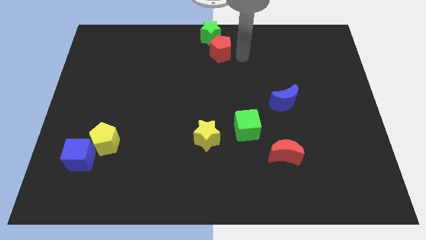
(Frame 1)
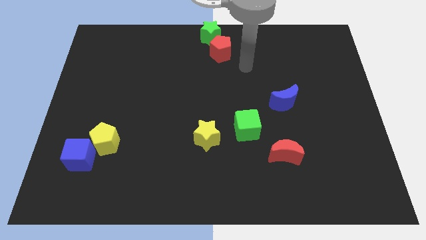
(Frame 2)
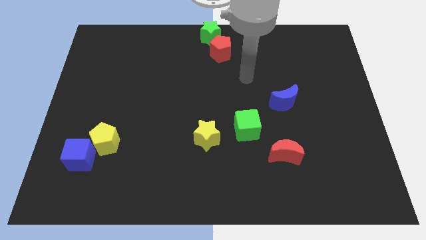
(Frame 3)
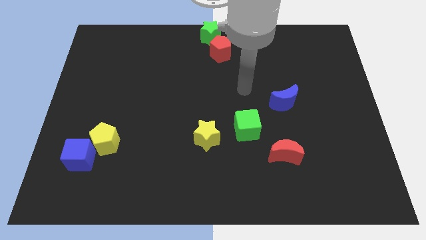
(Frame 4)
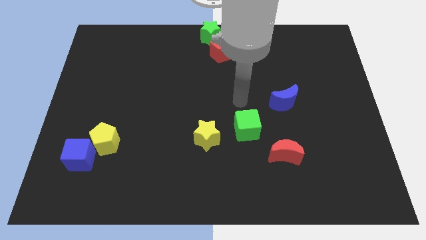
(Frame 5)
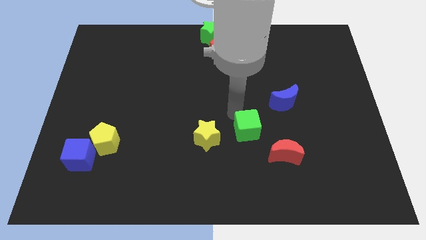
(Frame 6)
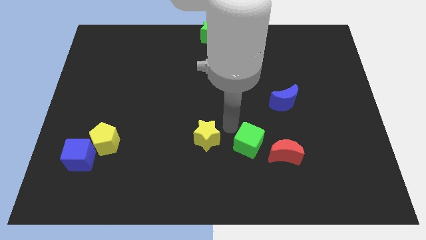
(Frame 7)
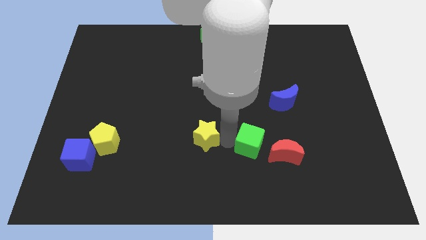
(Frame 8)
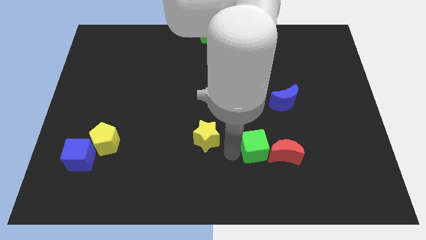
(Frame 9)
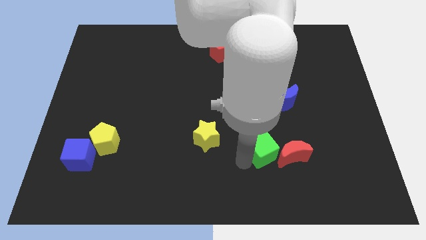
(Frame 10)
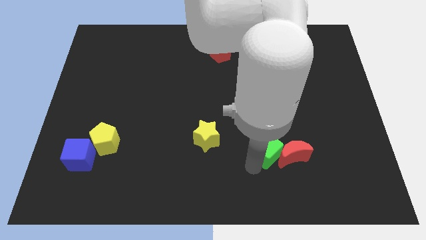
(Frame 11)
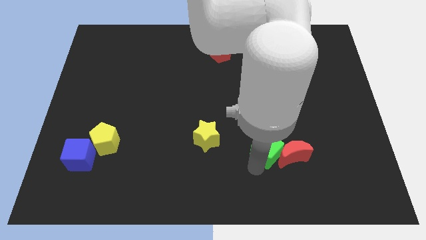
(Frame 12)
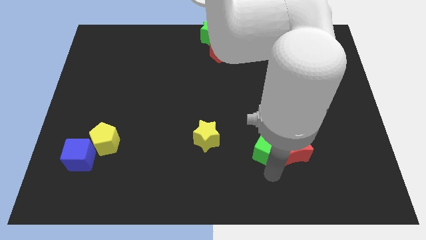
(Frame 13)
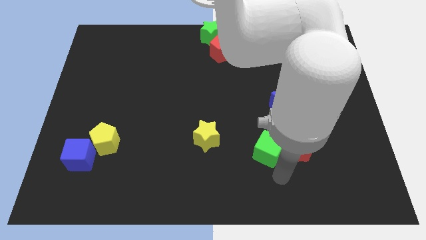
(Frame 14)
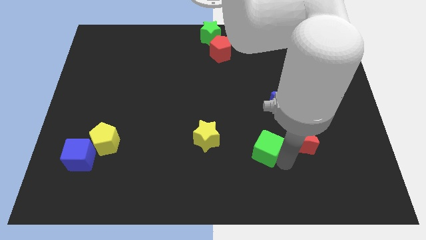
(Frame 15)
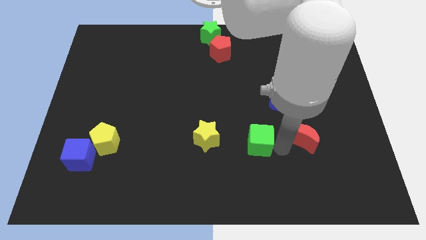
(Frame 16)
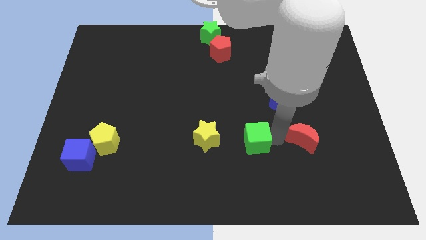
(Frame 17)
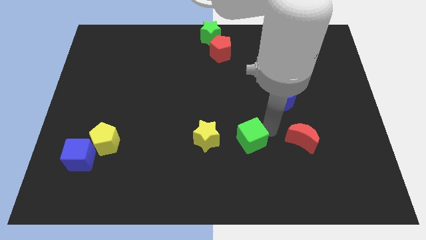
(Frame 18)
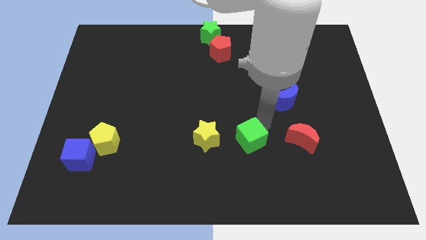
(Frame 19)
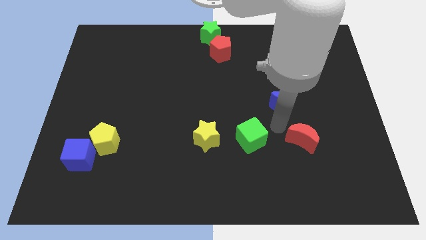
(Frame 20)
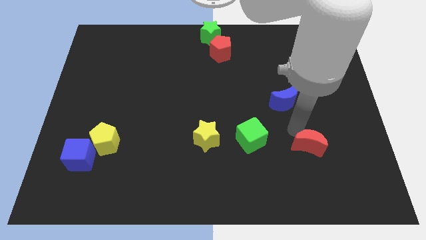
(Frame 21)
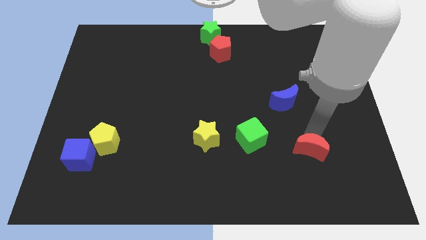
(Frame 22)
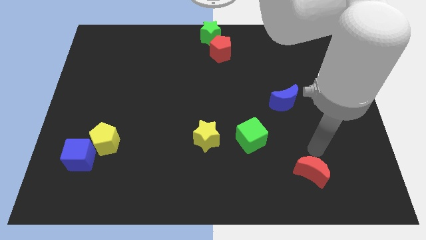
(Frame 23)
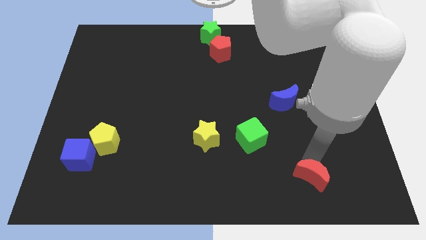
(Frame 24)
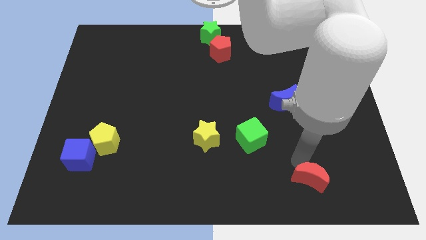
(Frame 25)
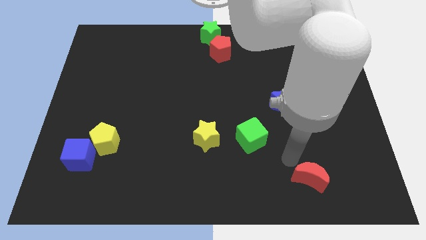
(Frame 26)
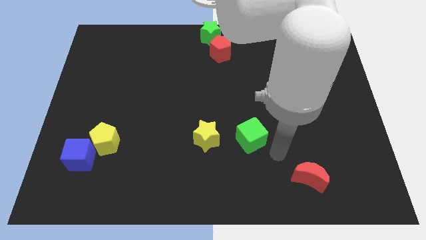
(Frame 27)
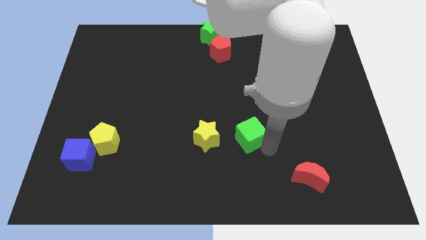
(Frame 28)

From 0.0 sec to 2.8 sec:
separate green block and red moon

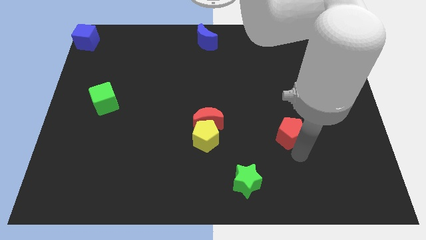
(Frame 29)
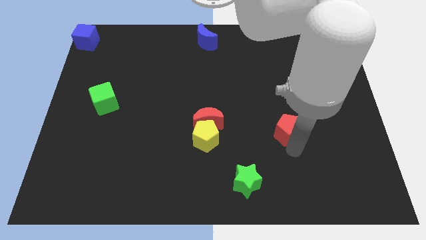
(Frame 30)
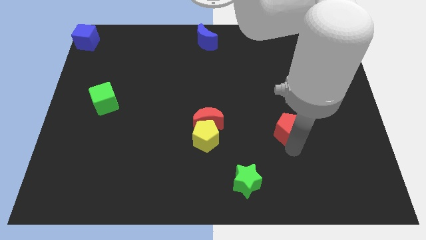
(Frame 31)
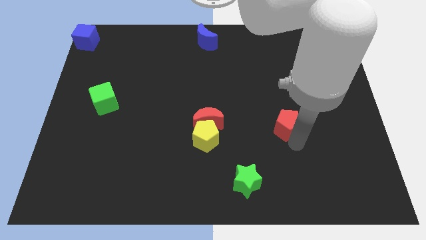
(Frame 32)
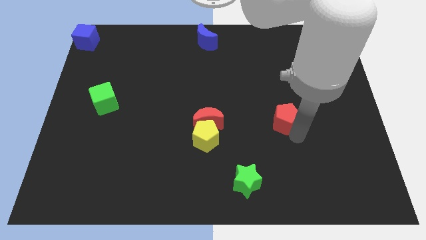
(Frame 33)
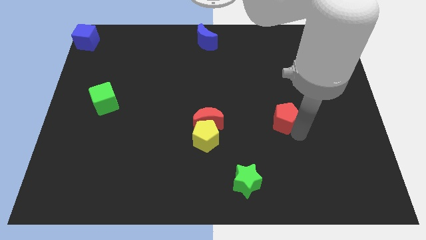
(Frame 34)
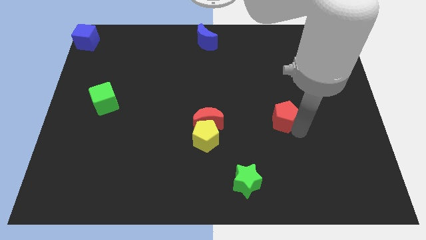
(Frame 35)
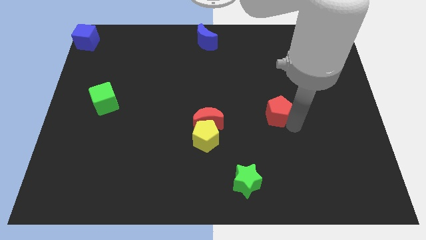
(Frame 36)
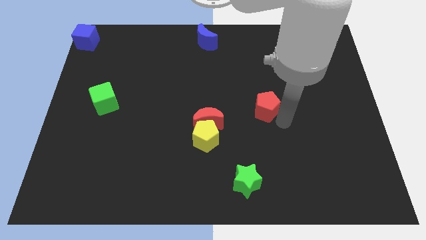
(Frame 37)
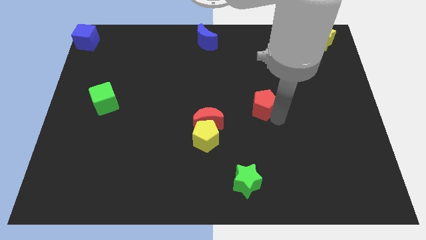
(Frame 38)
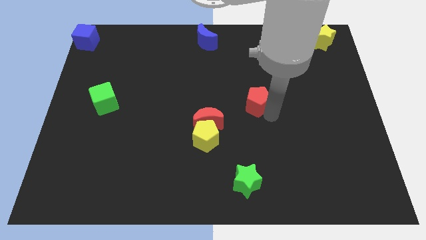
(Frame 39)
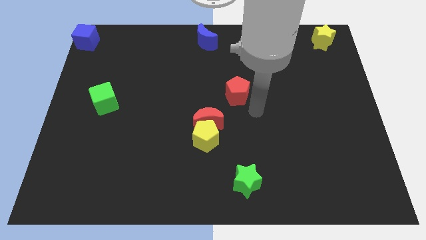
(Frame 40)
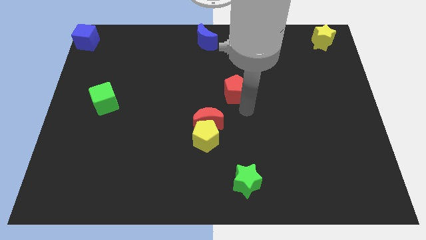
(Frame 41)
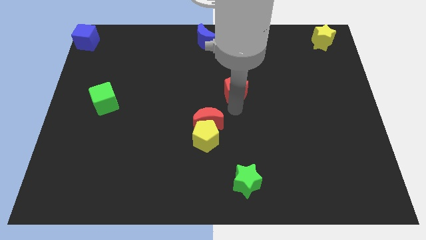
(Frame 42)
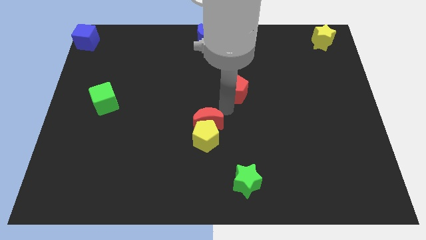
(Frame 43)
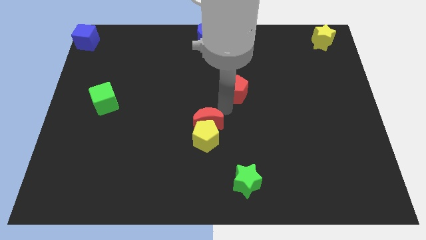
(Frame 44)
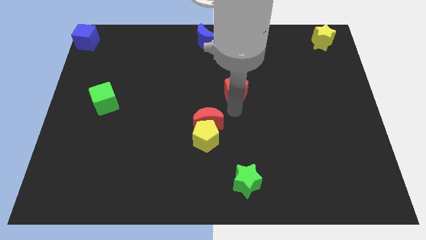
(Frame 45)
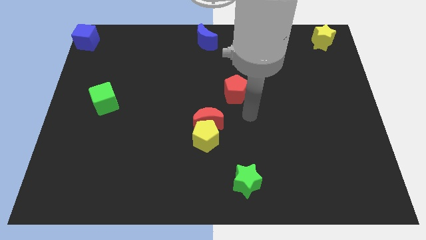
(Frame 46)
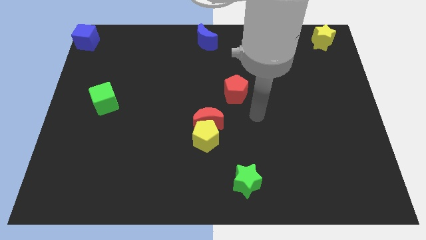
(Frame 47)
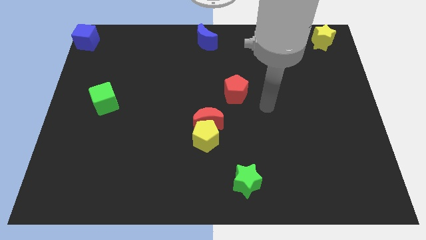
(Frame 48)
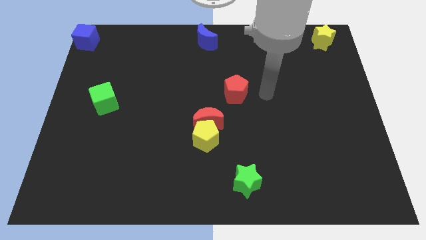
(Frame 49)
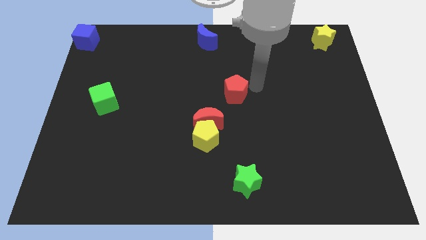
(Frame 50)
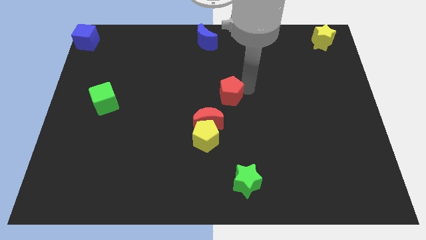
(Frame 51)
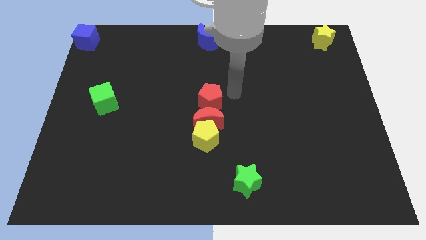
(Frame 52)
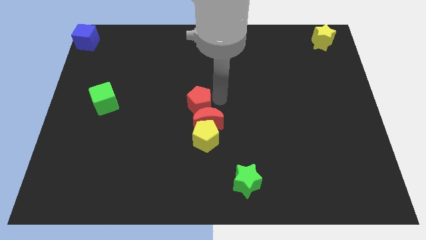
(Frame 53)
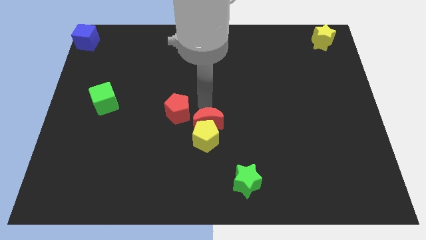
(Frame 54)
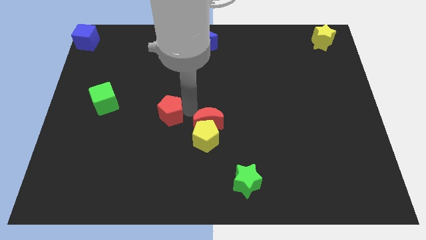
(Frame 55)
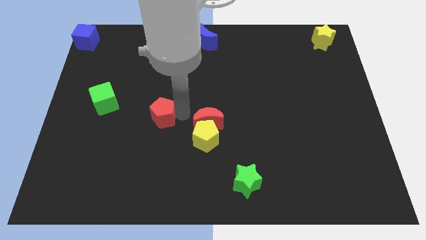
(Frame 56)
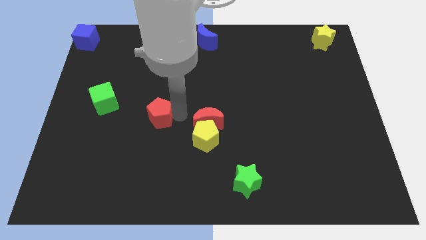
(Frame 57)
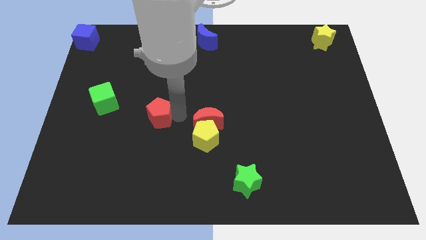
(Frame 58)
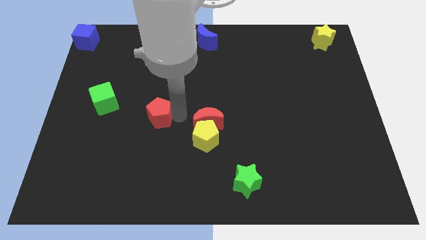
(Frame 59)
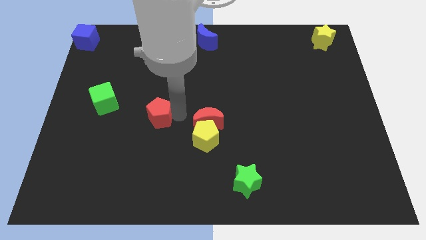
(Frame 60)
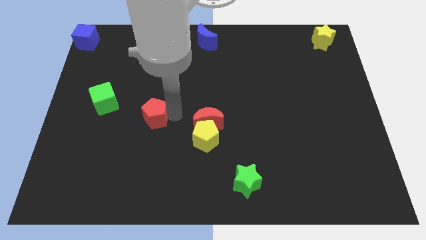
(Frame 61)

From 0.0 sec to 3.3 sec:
place the red pentagon in between the green cube and the red crescent

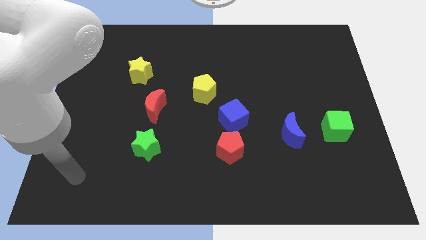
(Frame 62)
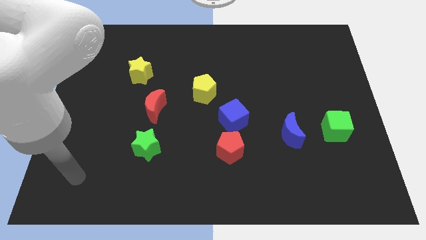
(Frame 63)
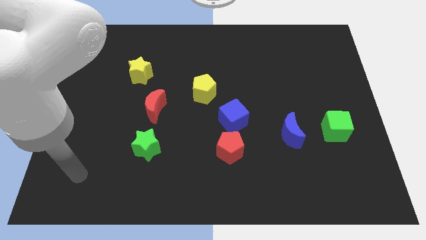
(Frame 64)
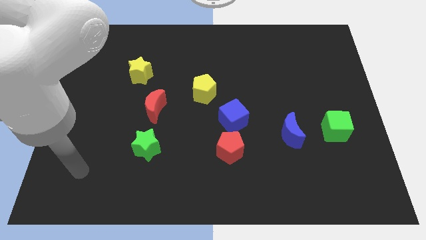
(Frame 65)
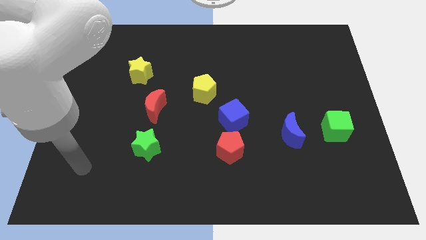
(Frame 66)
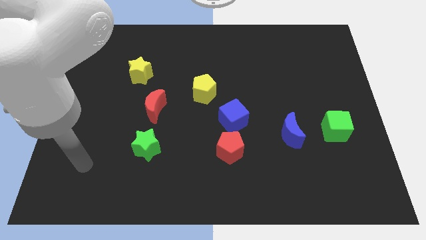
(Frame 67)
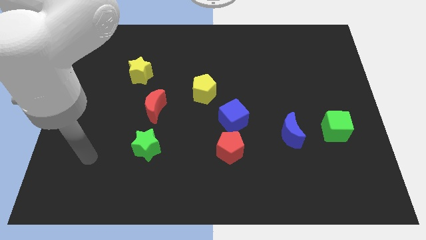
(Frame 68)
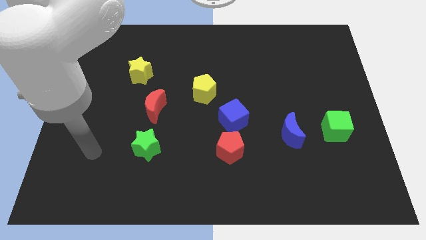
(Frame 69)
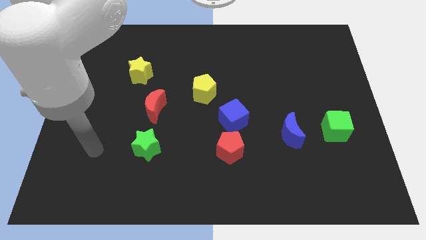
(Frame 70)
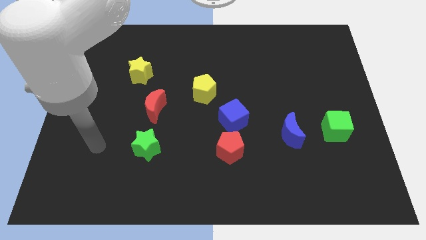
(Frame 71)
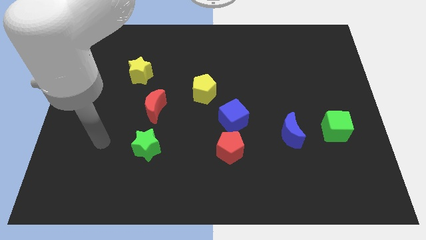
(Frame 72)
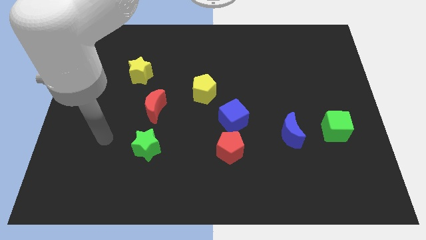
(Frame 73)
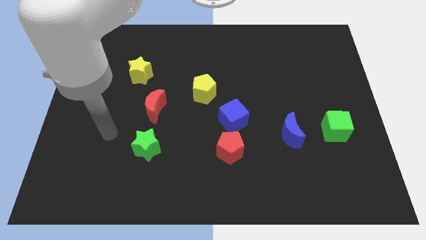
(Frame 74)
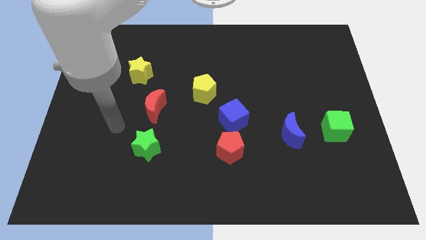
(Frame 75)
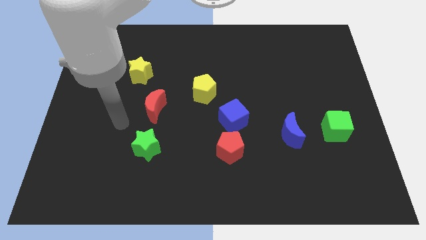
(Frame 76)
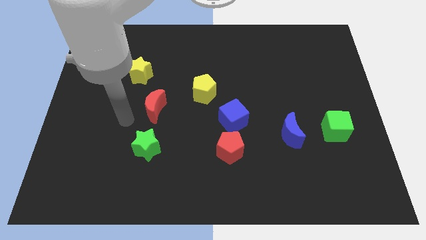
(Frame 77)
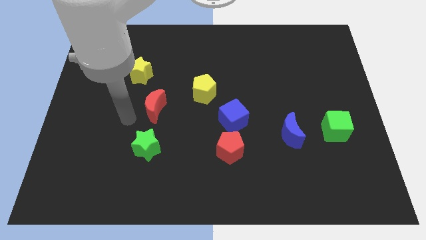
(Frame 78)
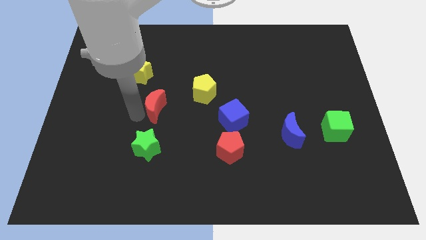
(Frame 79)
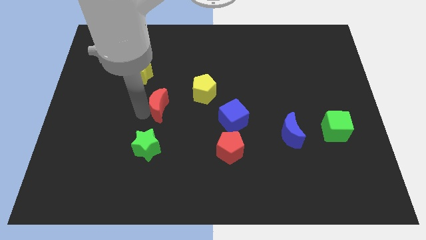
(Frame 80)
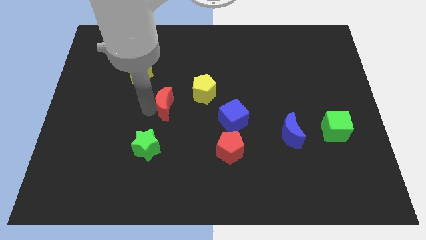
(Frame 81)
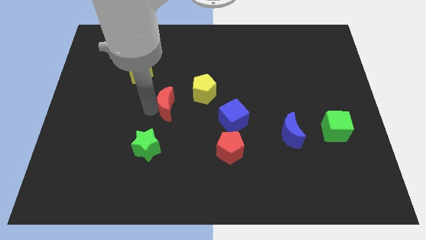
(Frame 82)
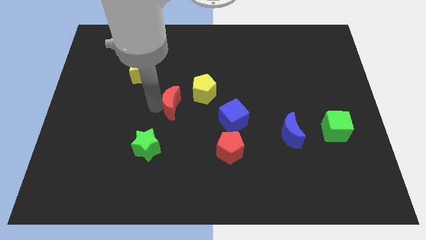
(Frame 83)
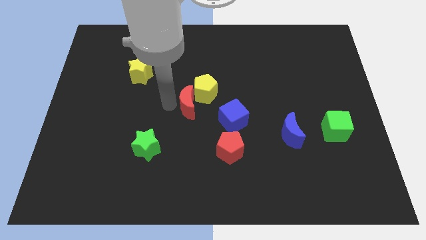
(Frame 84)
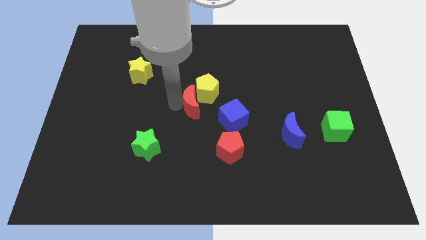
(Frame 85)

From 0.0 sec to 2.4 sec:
push the red moon into the yellow pentagon

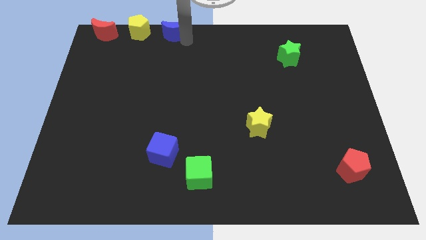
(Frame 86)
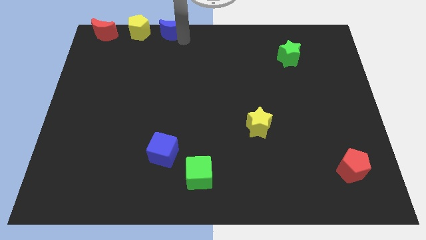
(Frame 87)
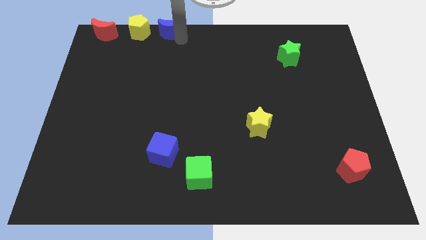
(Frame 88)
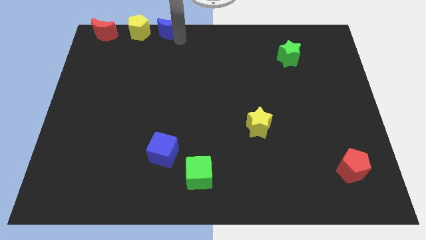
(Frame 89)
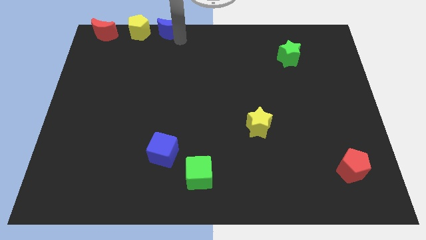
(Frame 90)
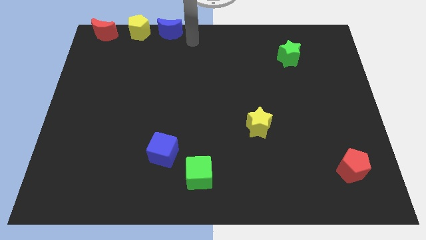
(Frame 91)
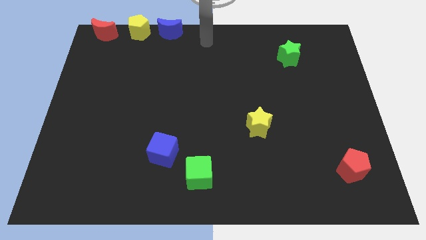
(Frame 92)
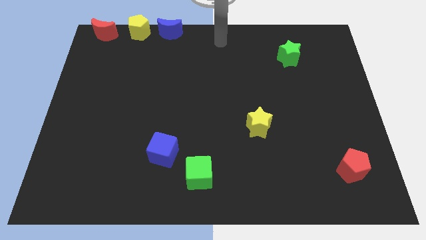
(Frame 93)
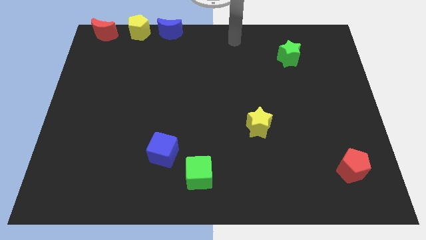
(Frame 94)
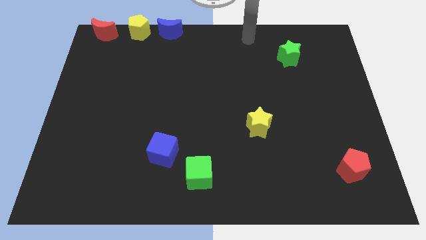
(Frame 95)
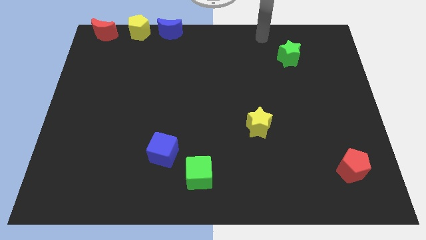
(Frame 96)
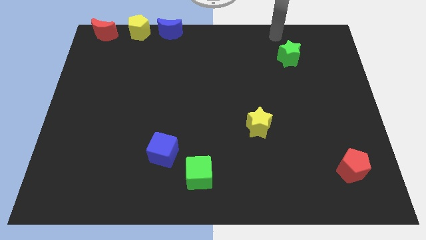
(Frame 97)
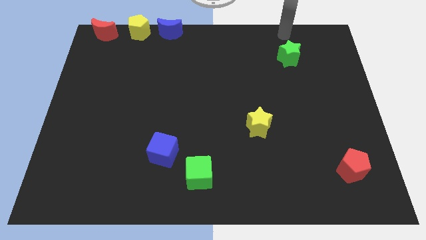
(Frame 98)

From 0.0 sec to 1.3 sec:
push the blue crescent right of yellow pentagon
